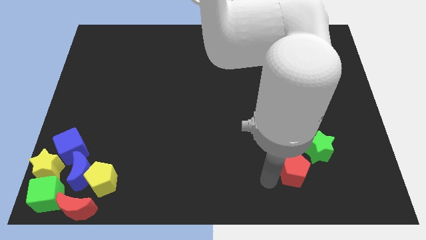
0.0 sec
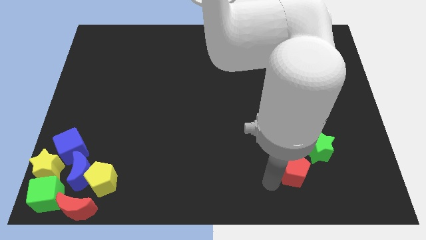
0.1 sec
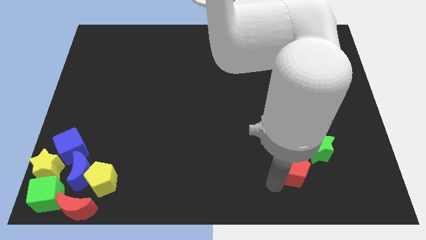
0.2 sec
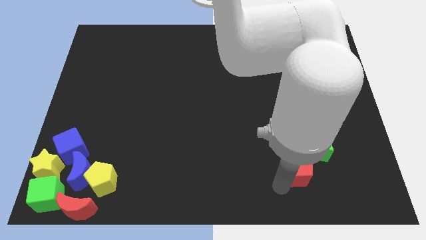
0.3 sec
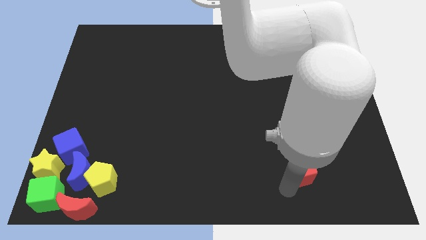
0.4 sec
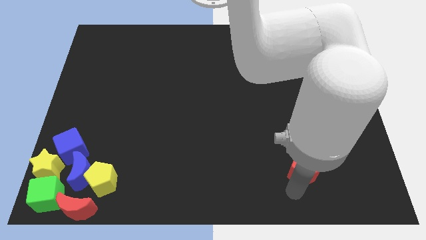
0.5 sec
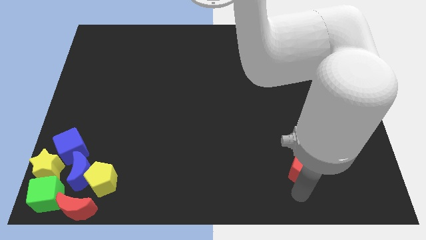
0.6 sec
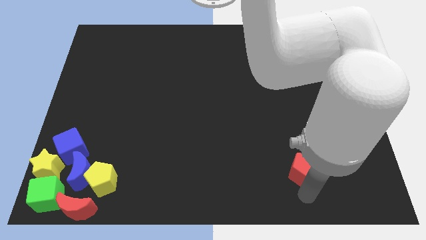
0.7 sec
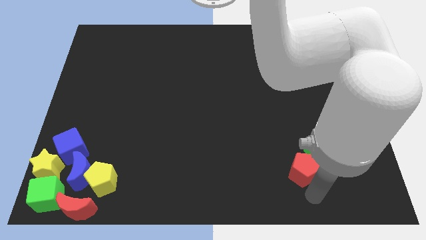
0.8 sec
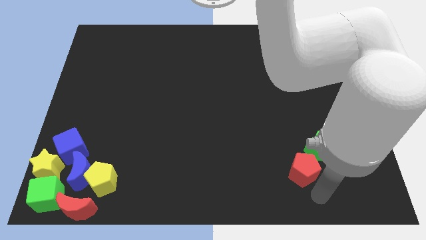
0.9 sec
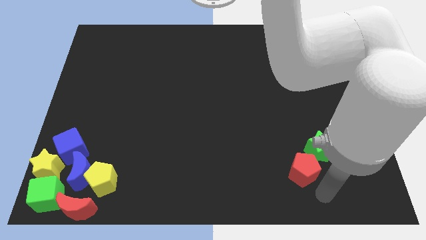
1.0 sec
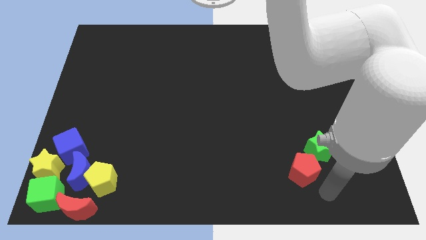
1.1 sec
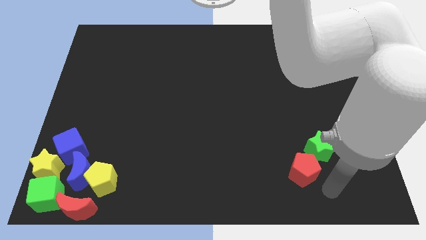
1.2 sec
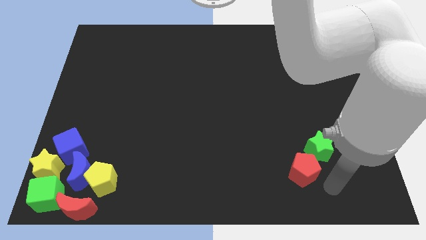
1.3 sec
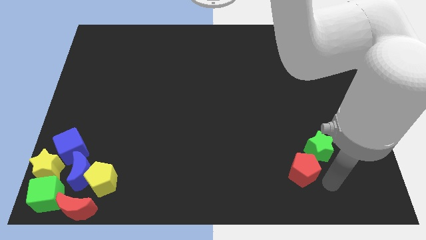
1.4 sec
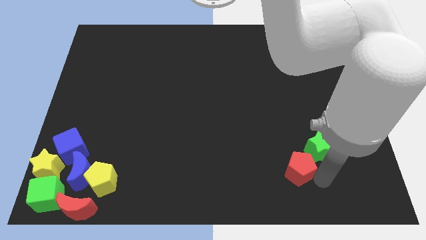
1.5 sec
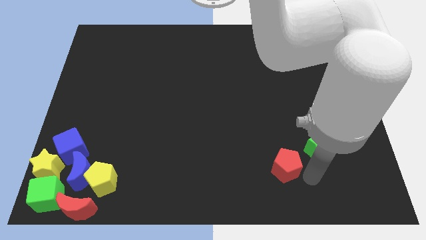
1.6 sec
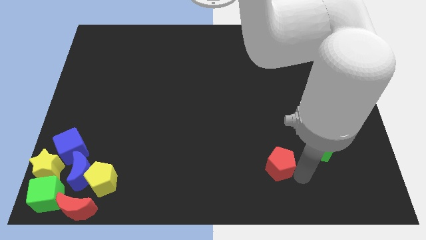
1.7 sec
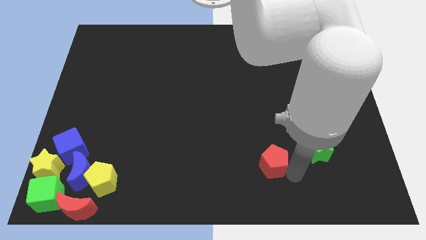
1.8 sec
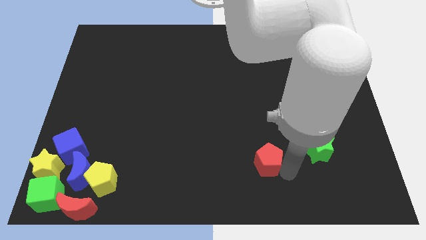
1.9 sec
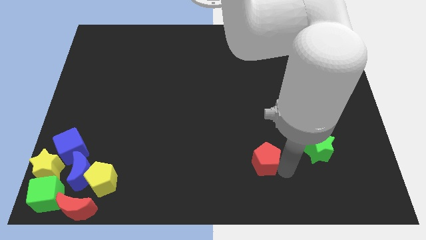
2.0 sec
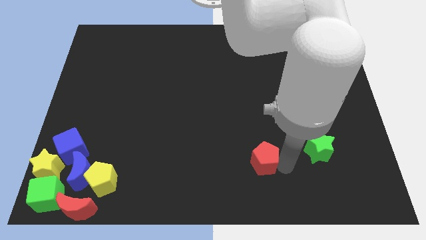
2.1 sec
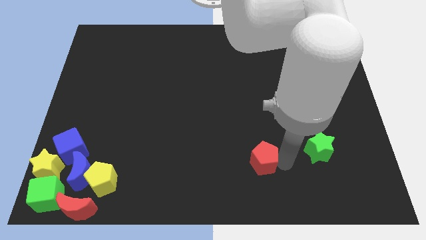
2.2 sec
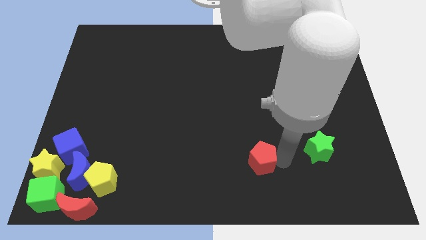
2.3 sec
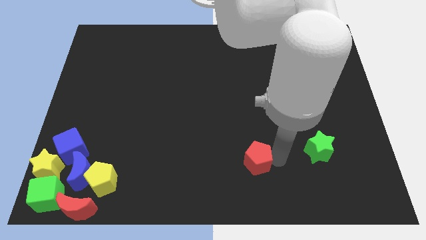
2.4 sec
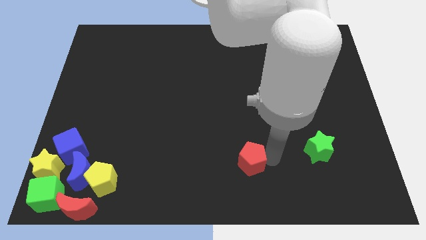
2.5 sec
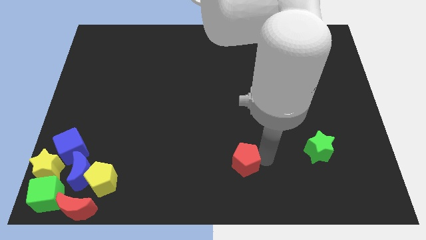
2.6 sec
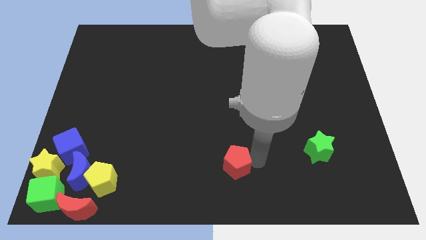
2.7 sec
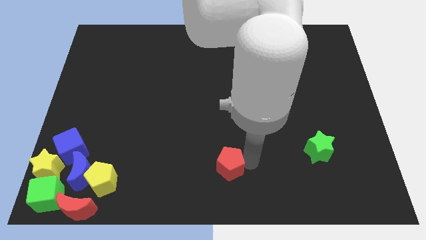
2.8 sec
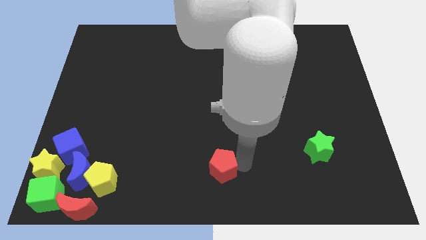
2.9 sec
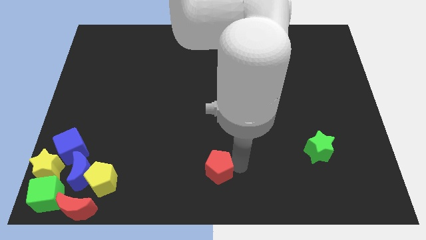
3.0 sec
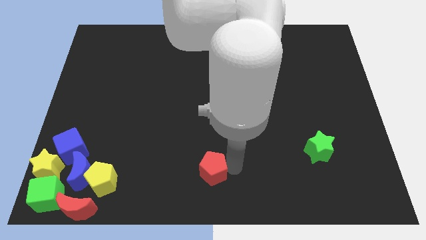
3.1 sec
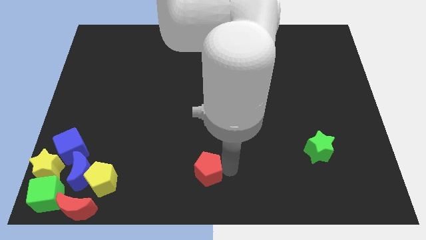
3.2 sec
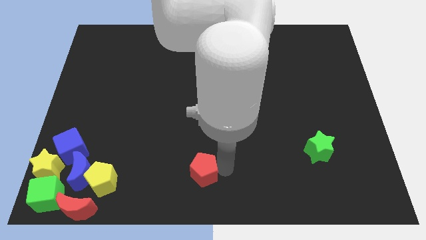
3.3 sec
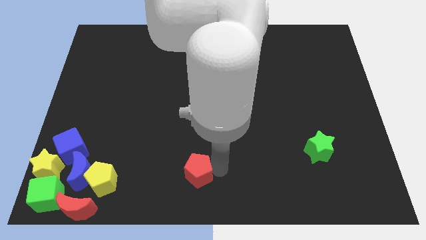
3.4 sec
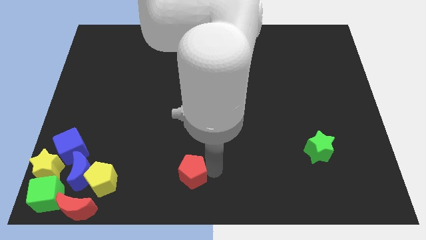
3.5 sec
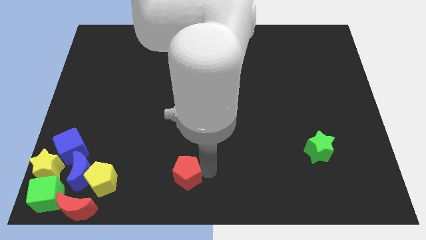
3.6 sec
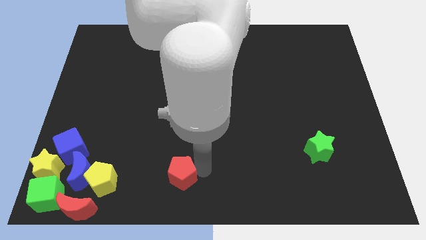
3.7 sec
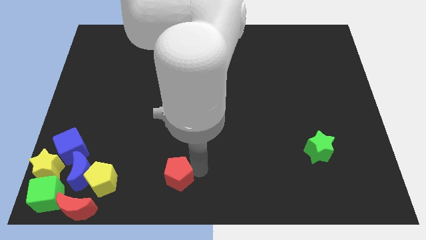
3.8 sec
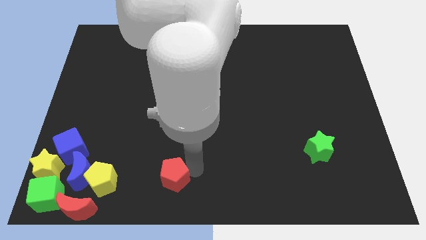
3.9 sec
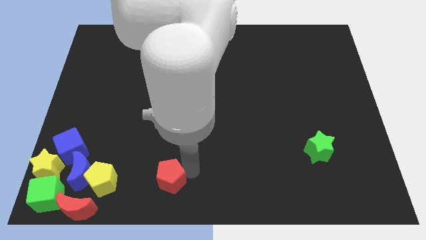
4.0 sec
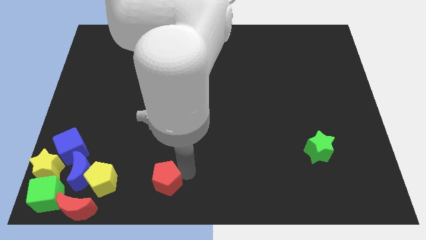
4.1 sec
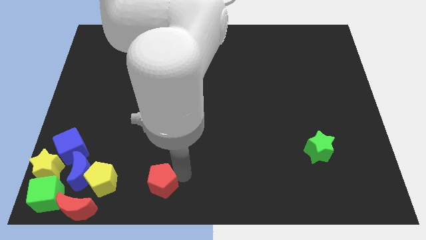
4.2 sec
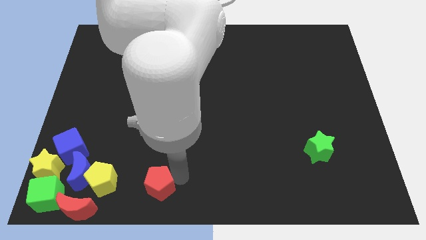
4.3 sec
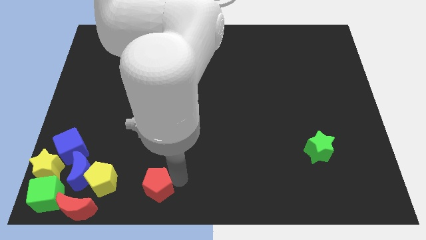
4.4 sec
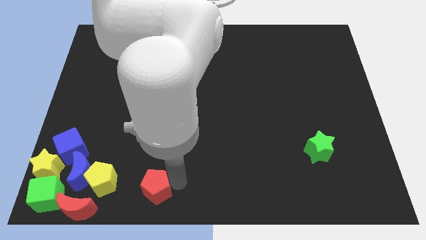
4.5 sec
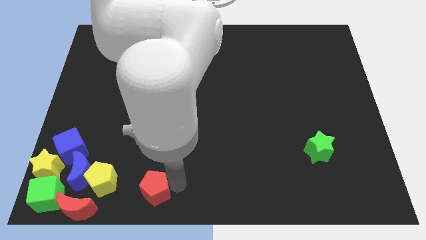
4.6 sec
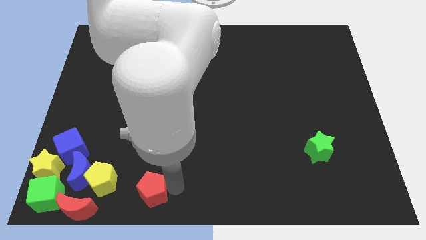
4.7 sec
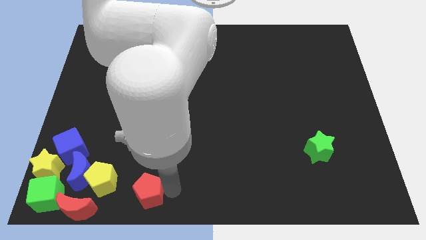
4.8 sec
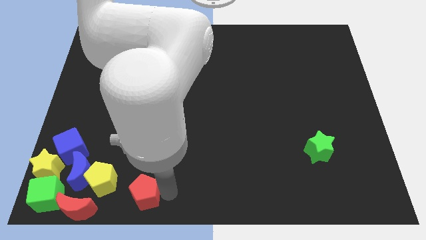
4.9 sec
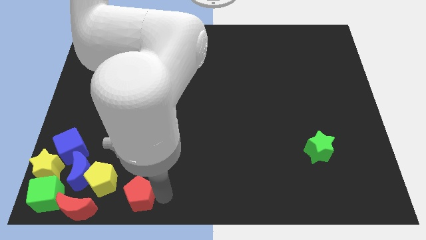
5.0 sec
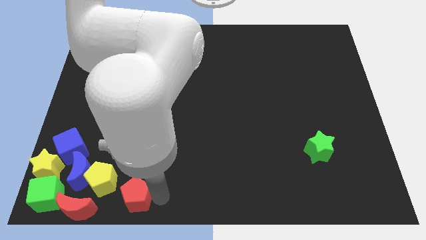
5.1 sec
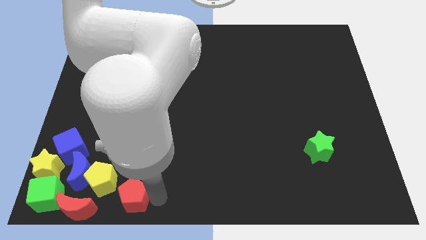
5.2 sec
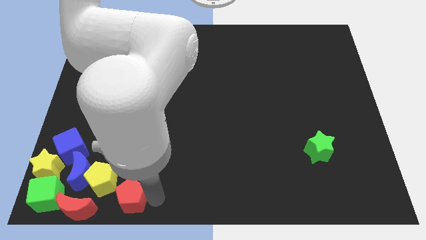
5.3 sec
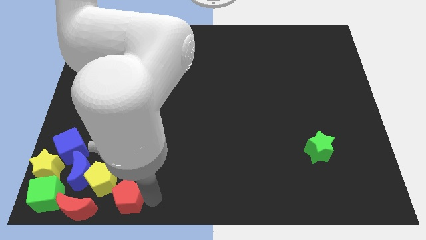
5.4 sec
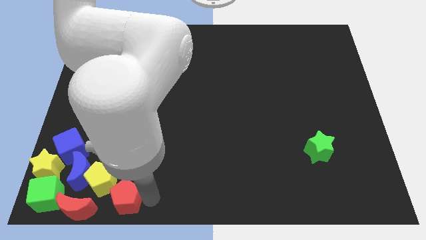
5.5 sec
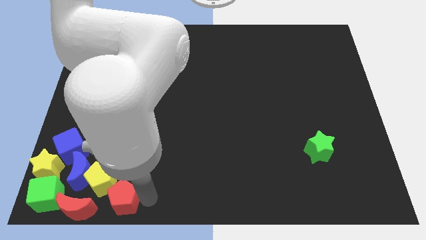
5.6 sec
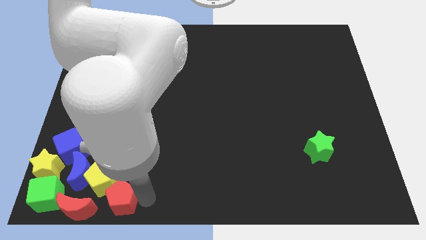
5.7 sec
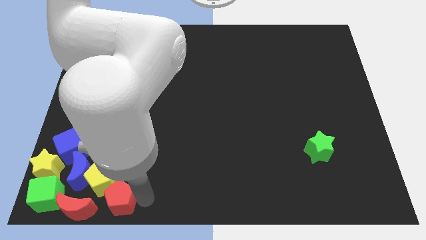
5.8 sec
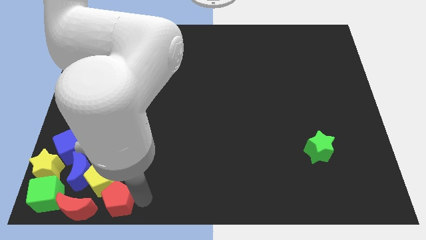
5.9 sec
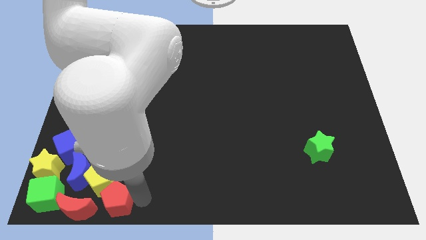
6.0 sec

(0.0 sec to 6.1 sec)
move the red pentagon at the bottom right side of the yellow pentagon

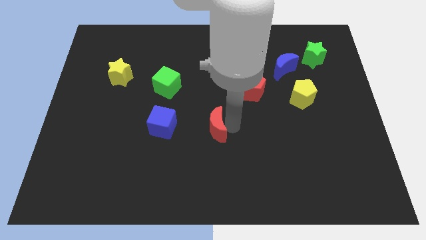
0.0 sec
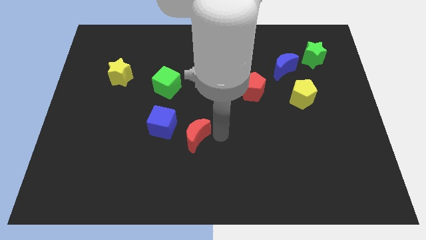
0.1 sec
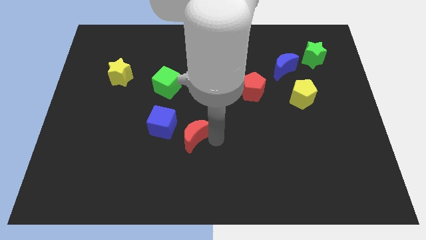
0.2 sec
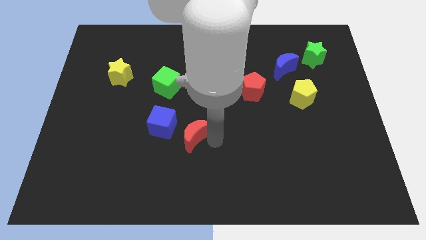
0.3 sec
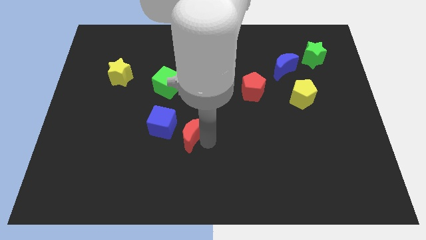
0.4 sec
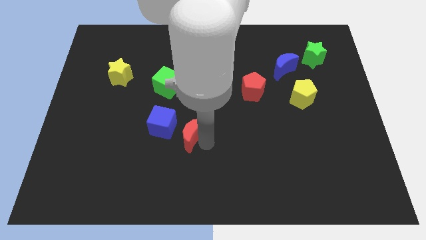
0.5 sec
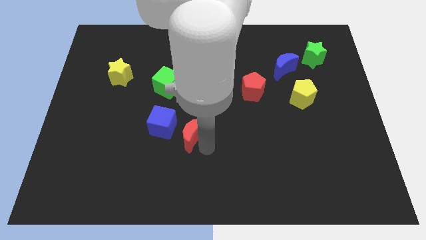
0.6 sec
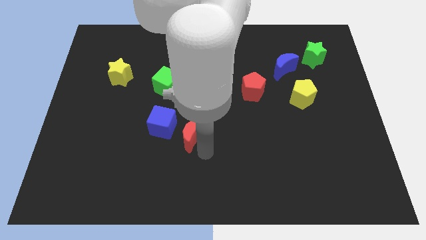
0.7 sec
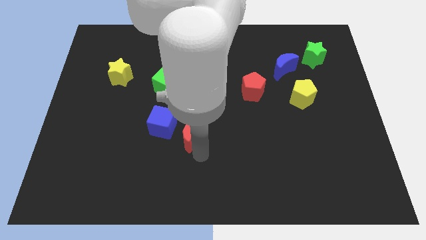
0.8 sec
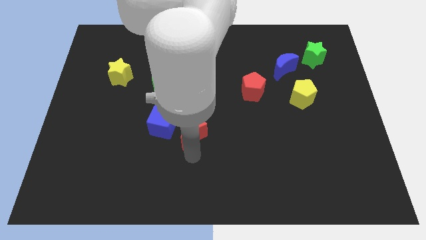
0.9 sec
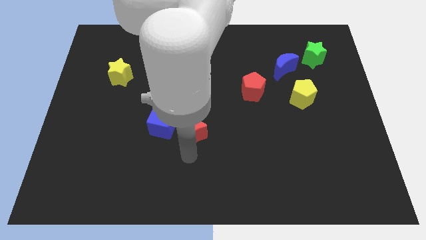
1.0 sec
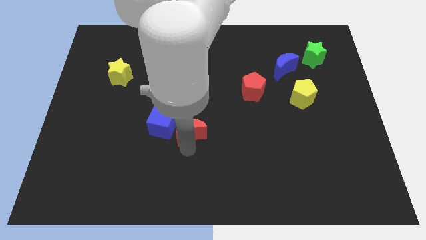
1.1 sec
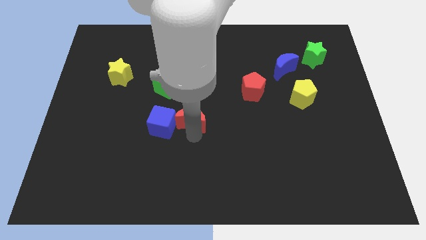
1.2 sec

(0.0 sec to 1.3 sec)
place the red moon to the right side of the blue cube

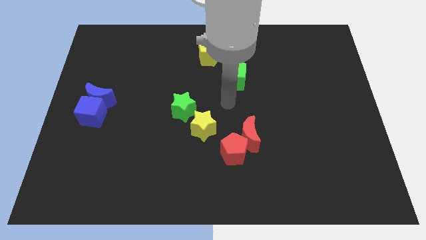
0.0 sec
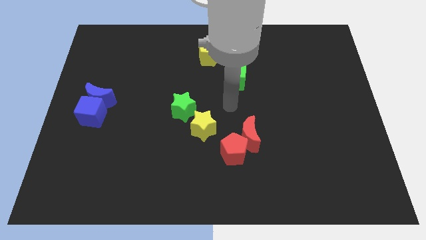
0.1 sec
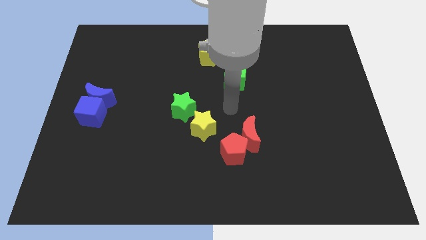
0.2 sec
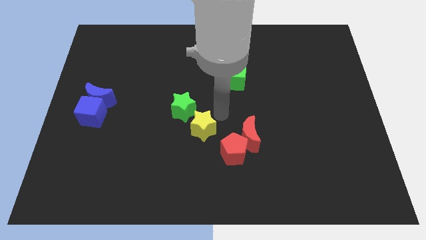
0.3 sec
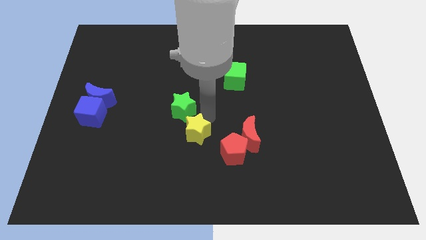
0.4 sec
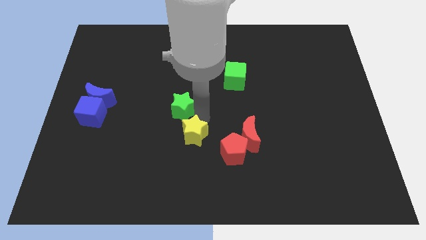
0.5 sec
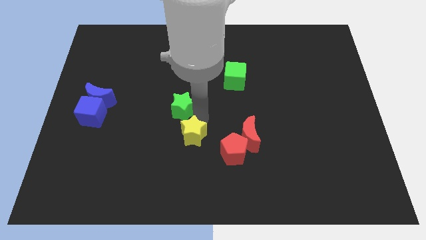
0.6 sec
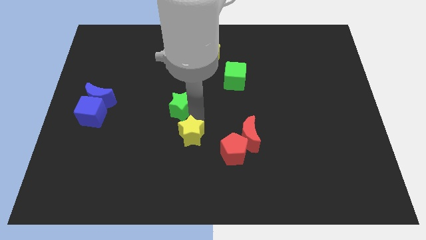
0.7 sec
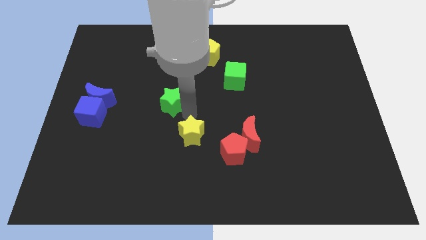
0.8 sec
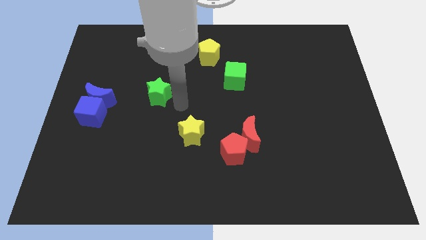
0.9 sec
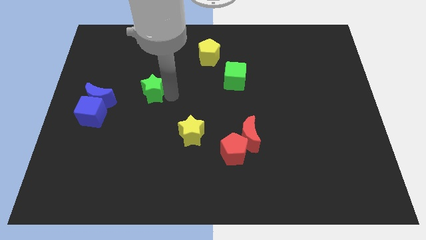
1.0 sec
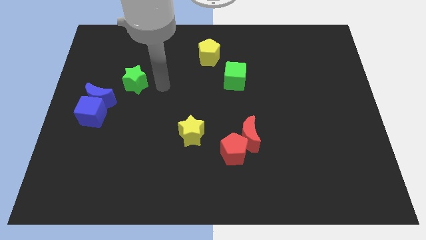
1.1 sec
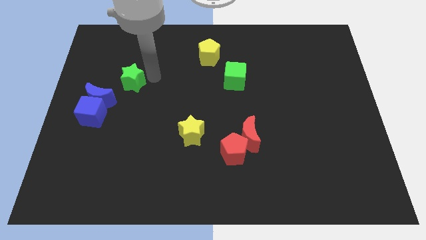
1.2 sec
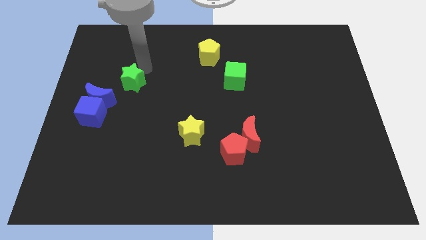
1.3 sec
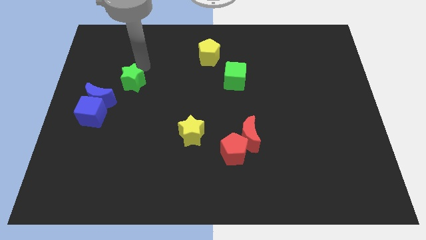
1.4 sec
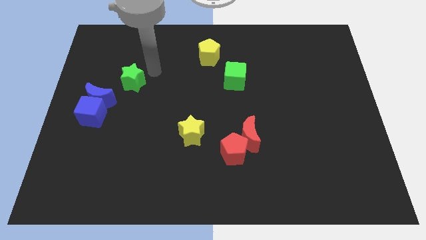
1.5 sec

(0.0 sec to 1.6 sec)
place the green star diagonally above the yellow star
